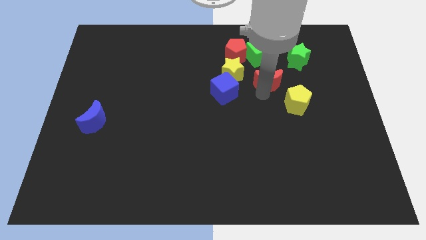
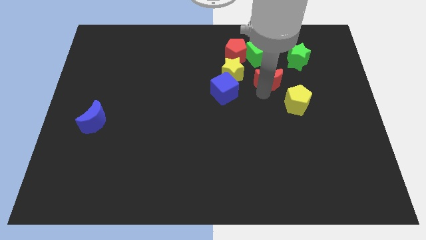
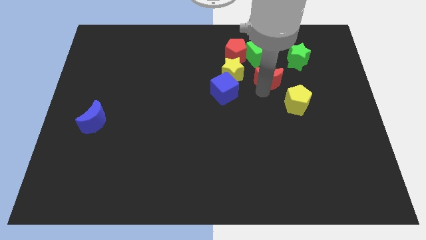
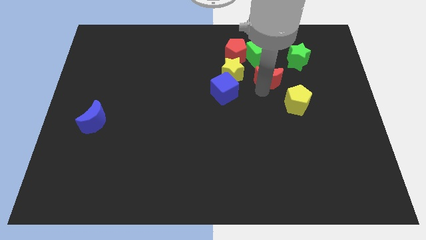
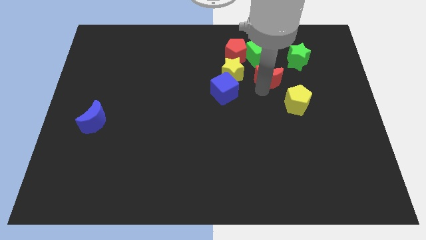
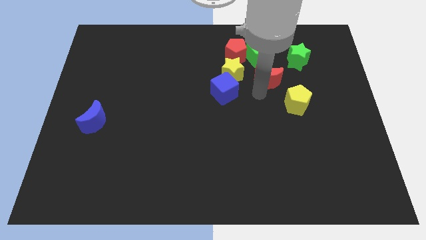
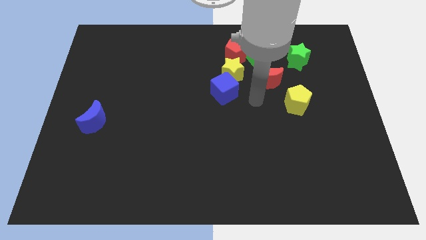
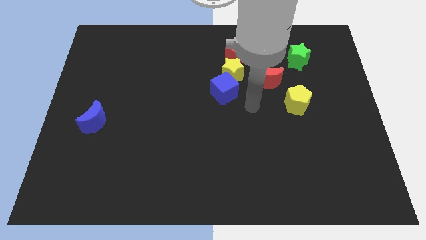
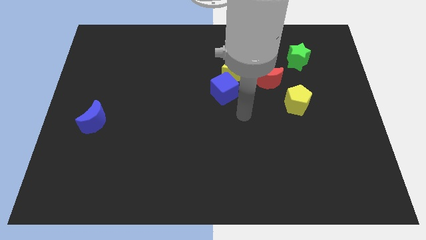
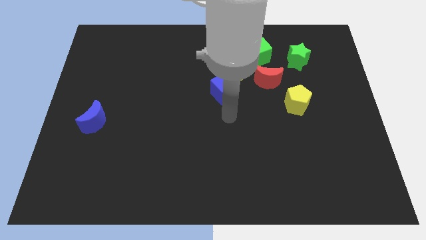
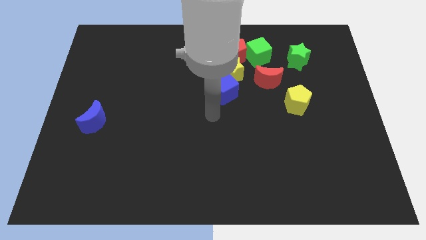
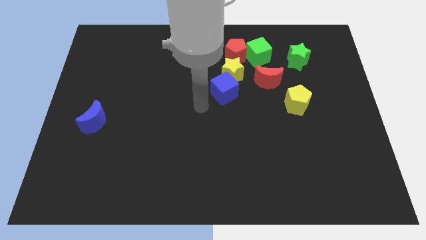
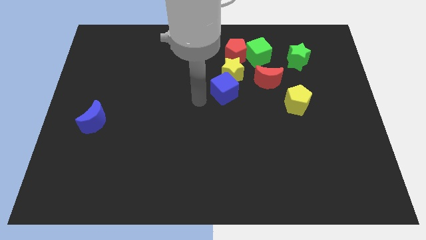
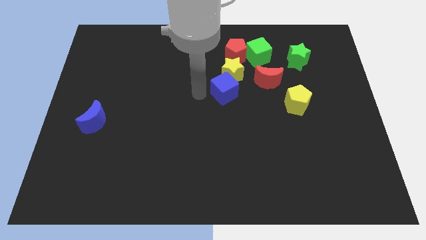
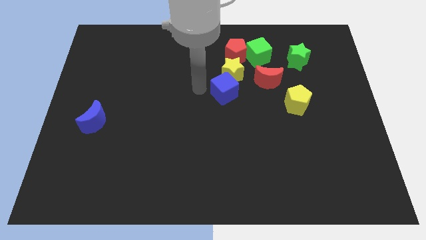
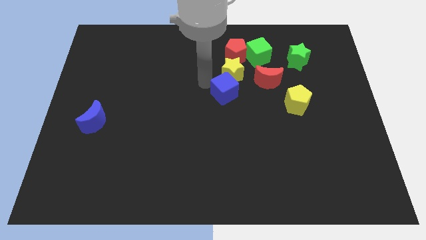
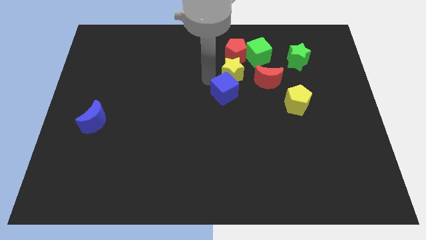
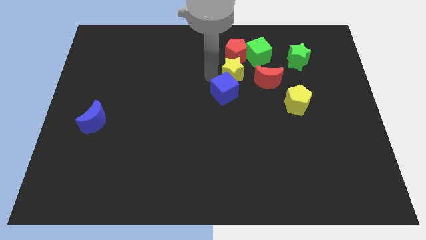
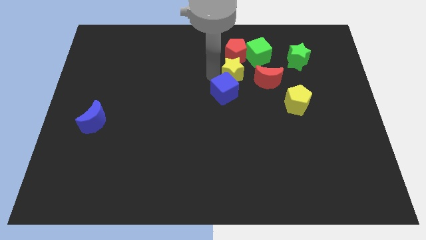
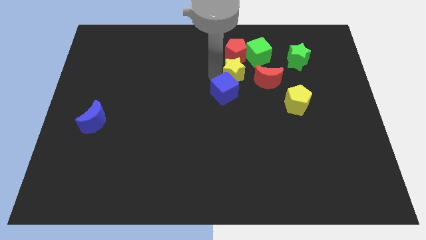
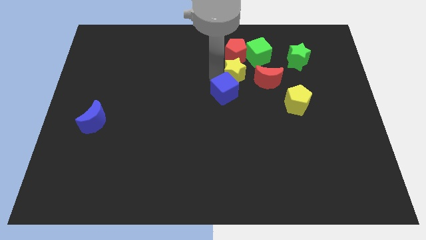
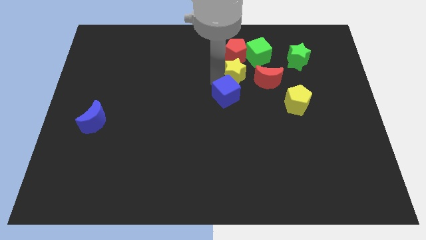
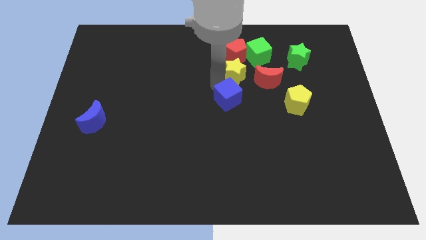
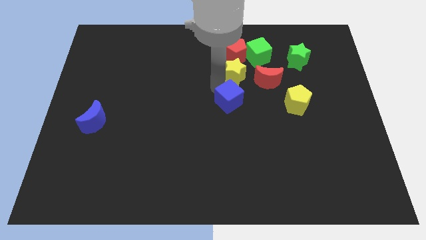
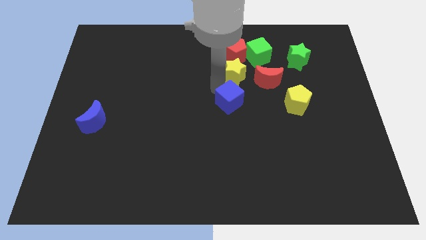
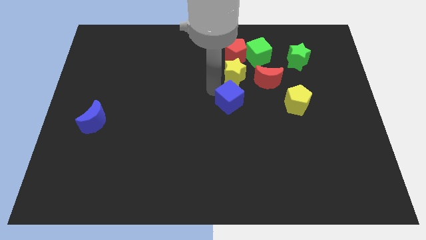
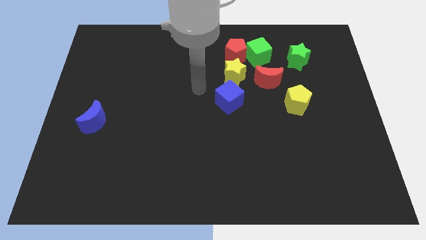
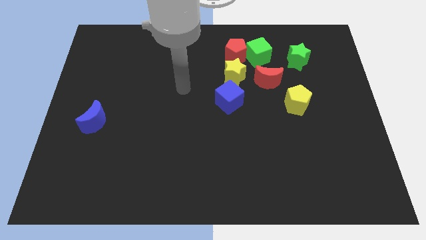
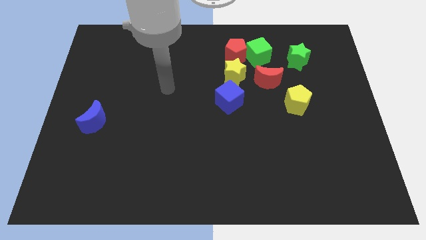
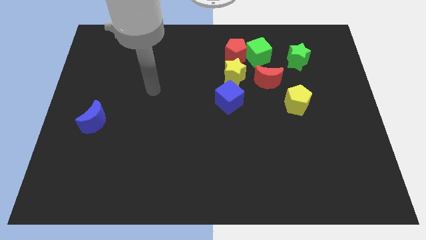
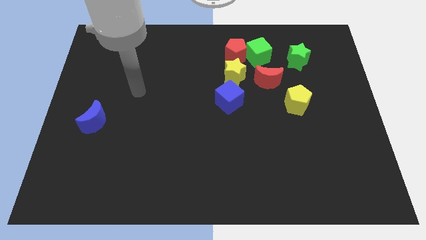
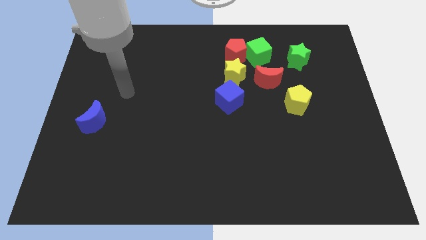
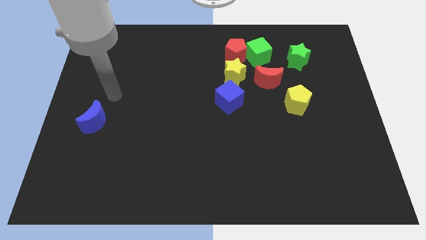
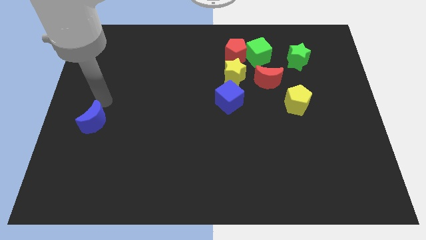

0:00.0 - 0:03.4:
push the blue cube slightly to the bottom

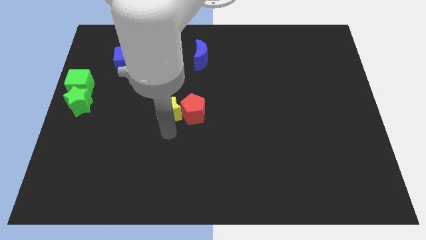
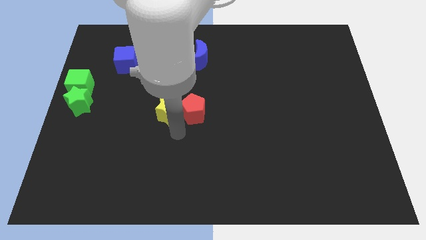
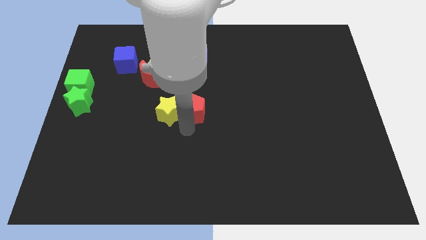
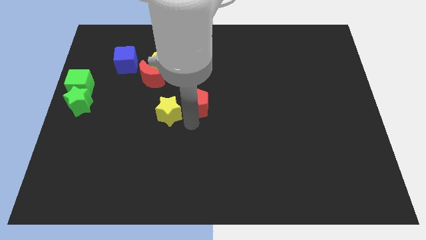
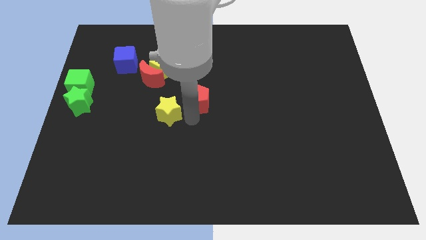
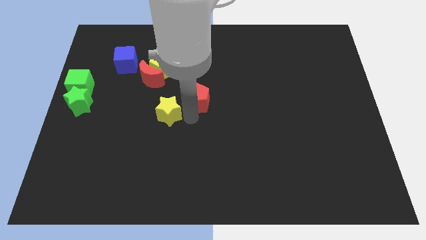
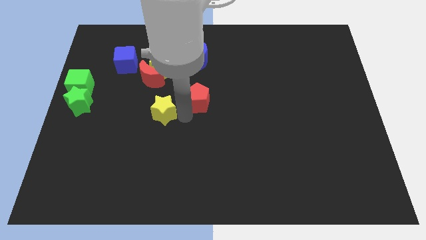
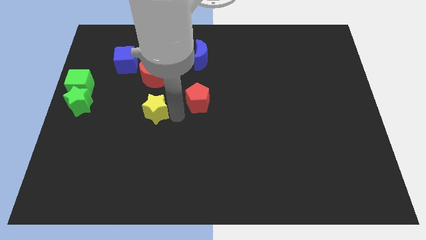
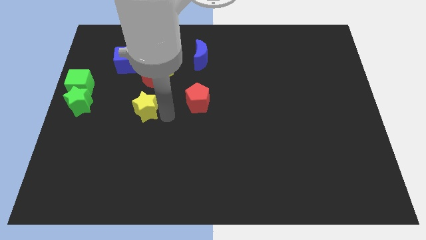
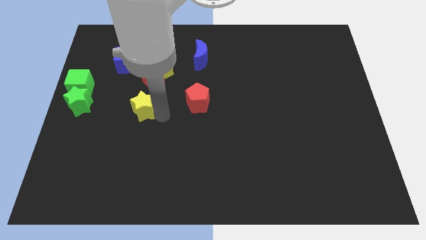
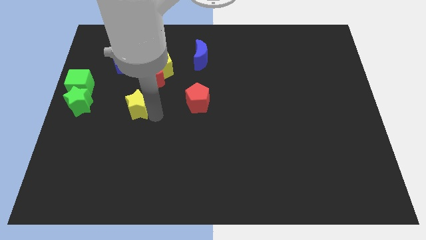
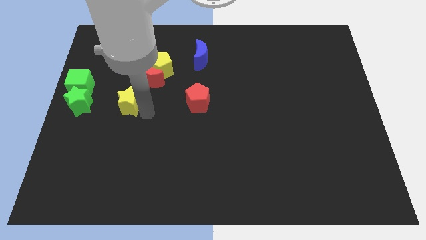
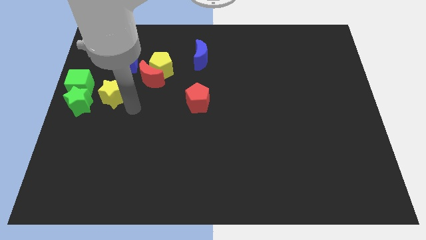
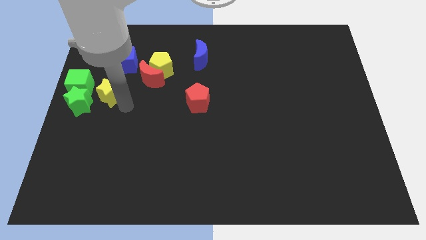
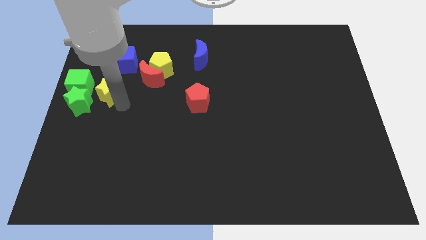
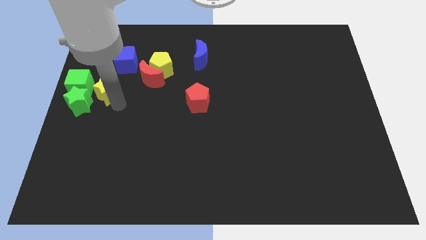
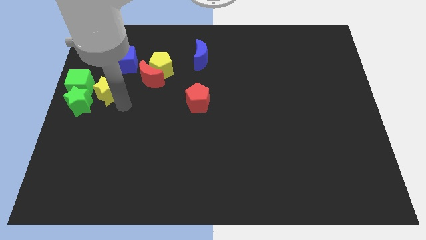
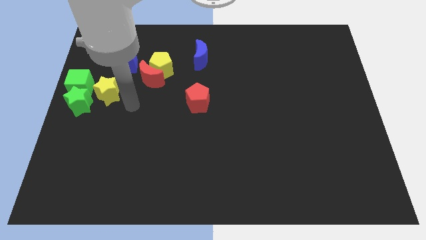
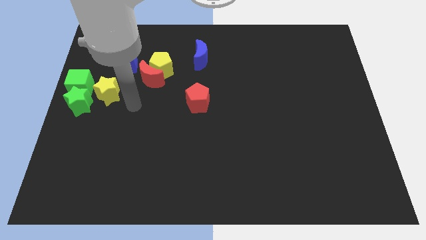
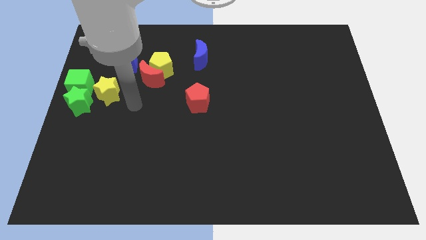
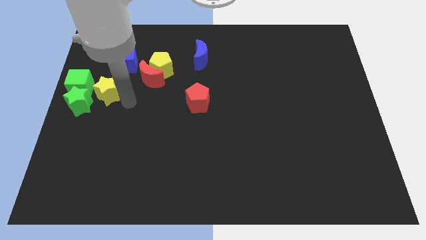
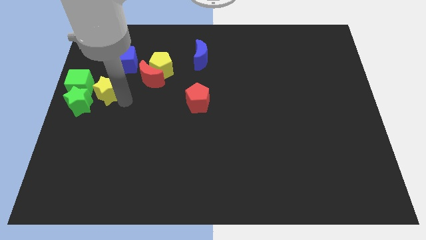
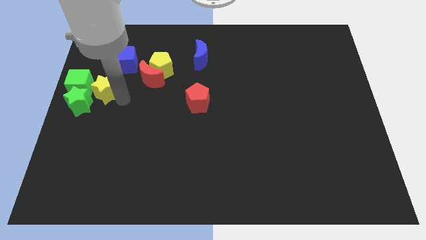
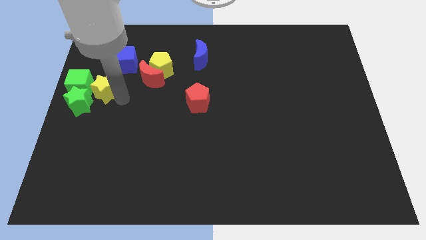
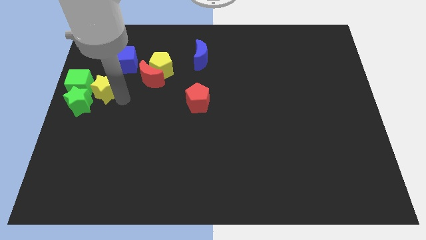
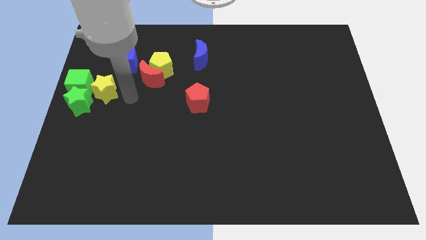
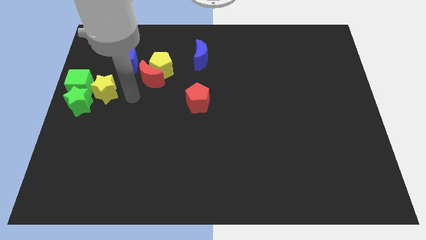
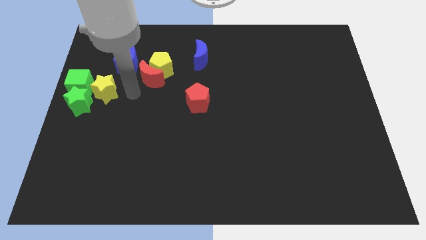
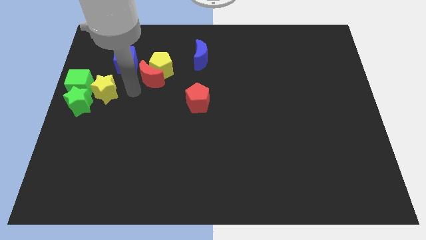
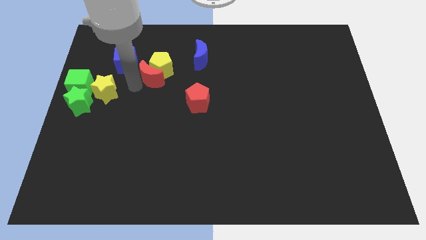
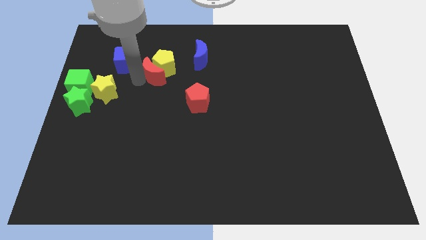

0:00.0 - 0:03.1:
place the yellow star to the right side of green cube

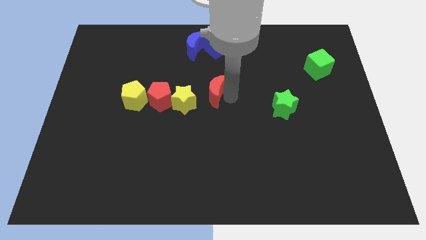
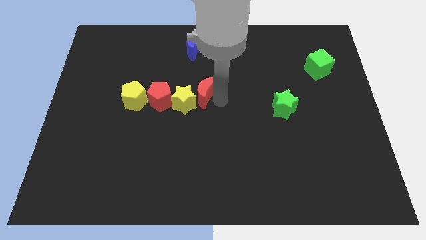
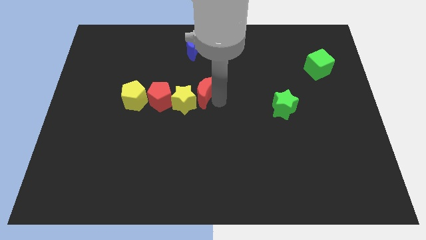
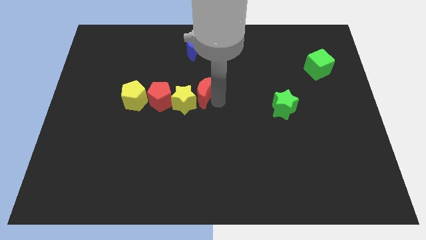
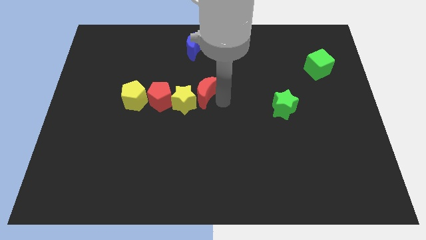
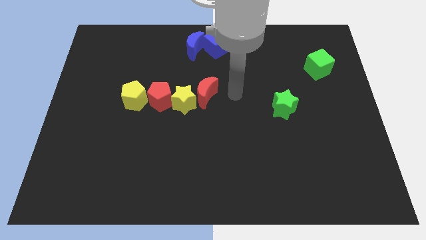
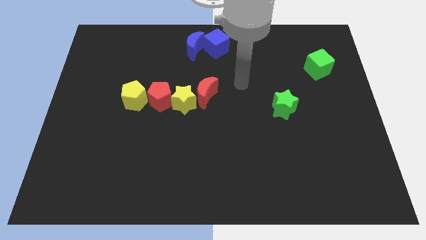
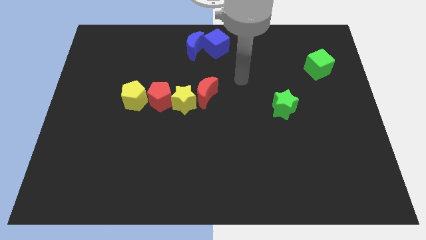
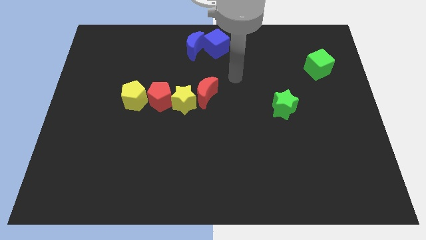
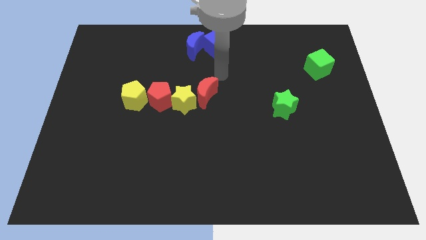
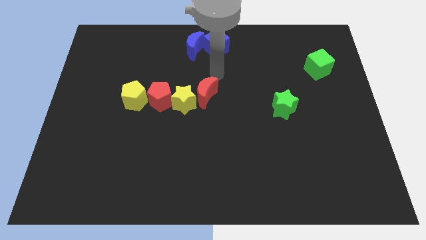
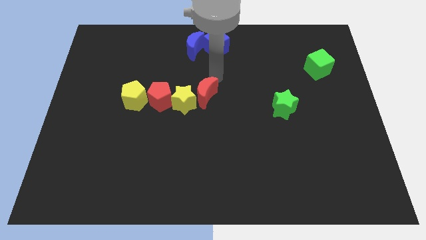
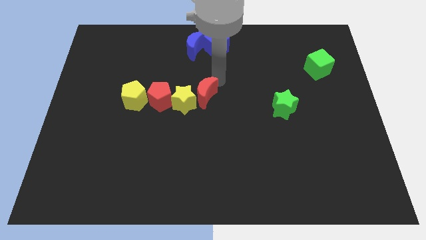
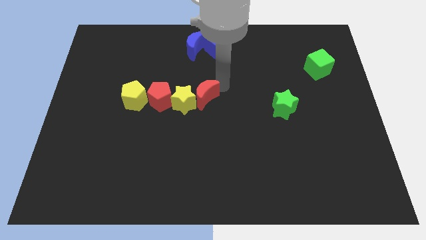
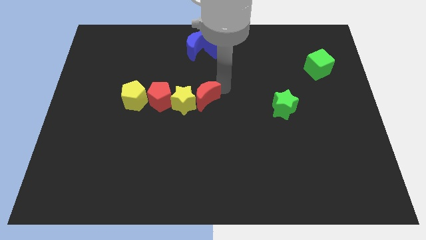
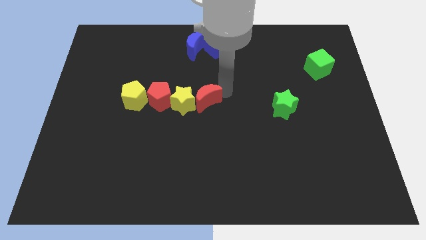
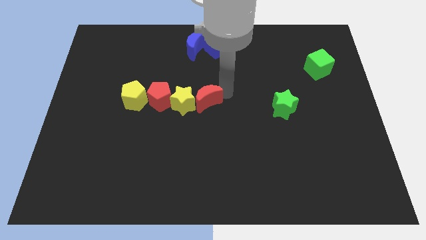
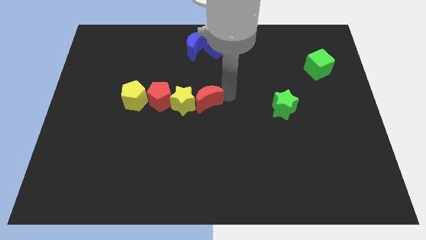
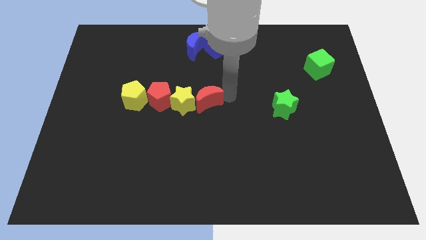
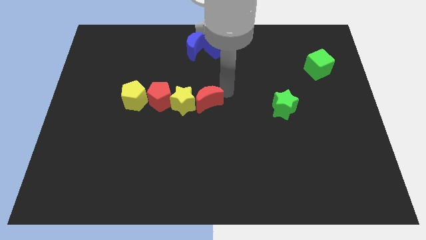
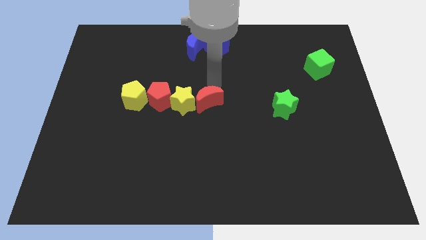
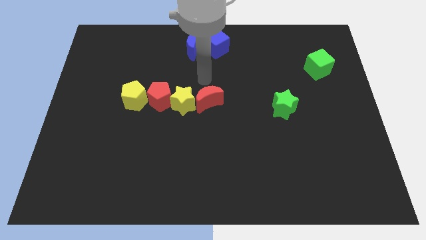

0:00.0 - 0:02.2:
push the red moon to the right side of yellow star

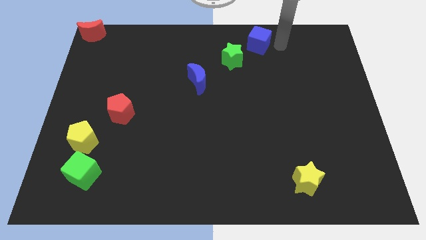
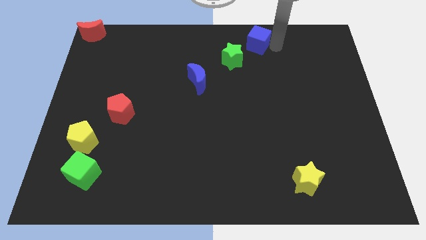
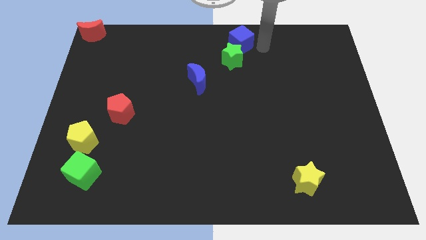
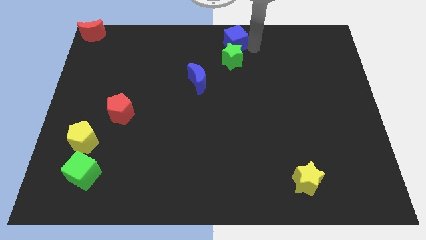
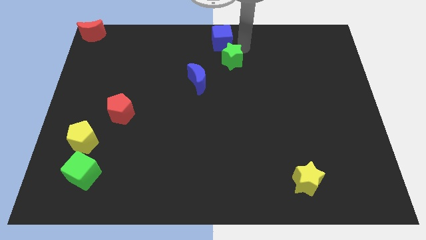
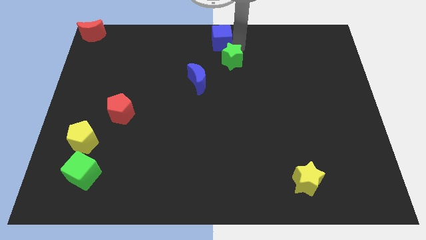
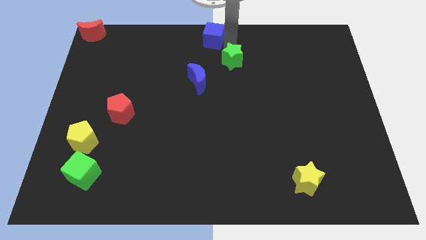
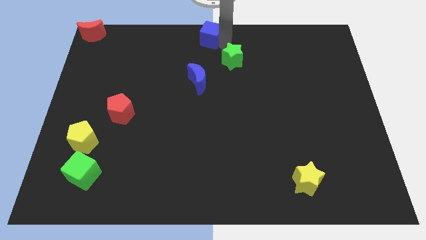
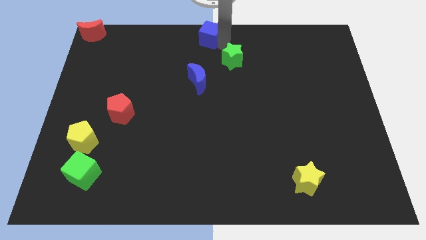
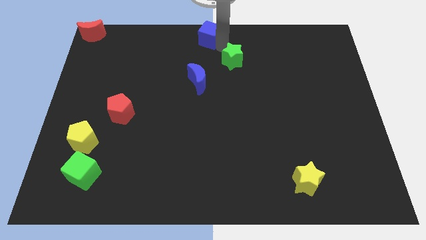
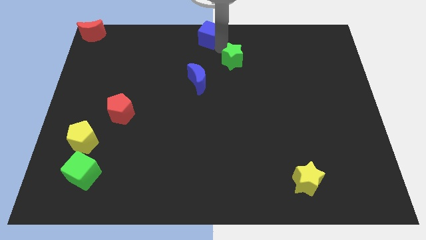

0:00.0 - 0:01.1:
slide blue cube towards top center
